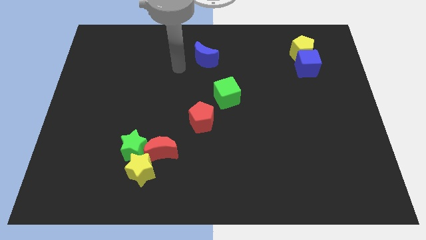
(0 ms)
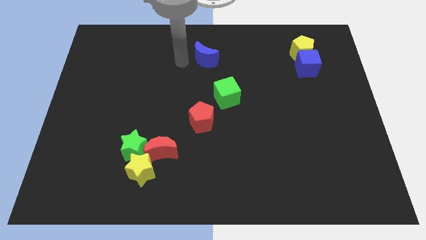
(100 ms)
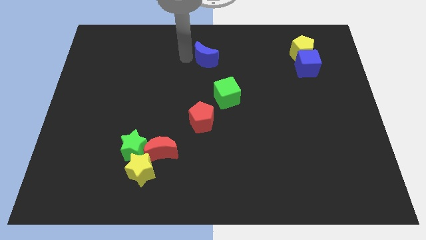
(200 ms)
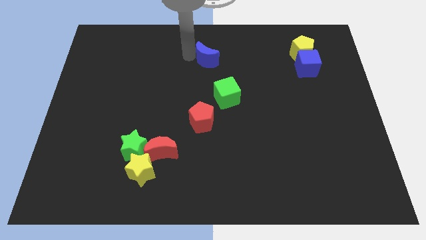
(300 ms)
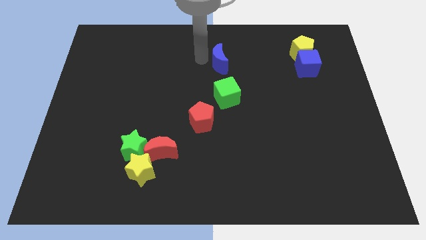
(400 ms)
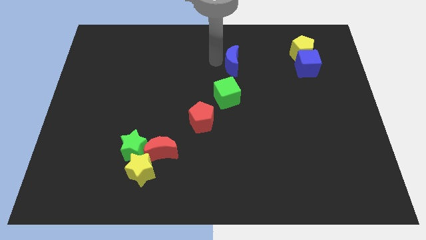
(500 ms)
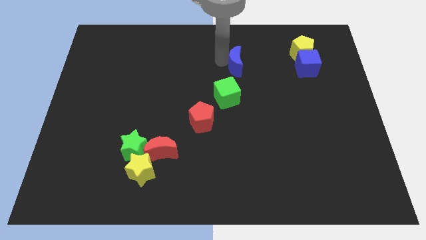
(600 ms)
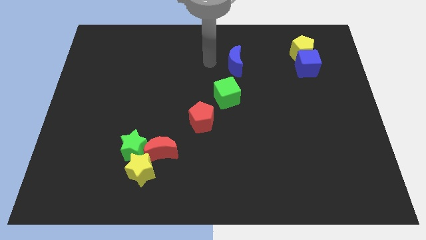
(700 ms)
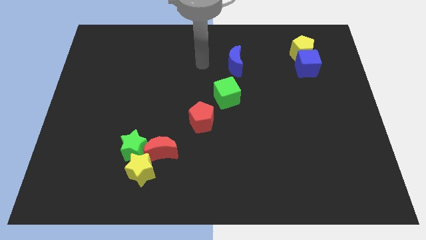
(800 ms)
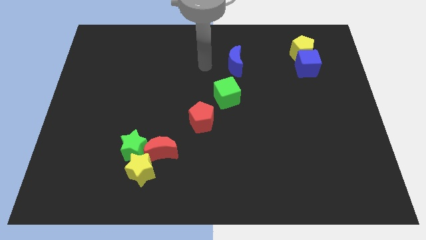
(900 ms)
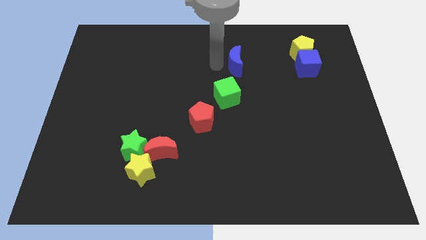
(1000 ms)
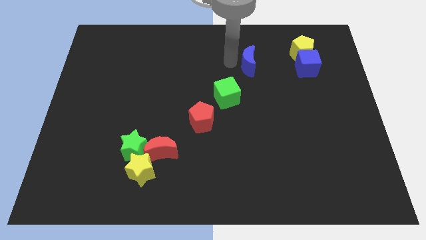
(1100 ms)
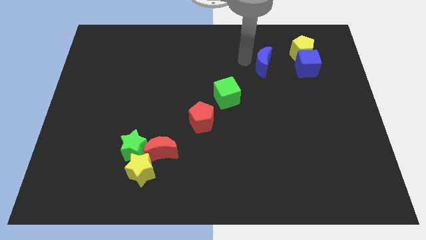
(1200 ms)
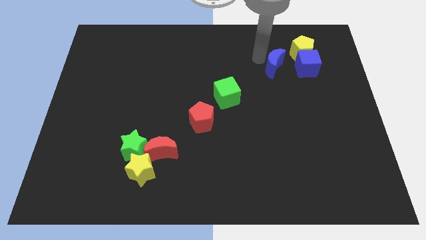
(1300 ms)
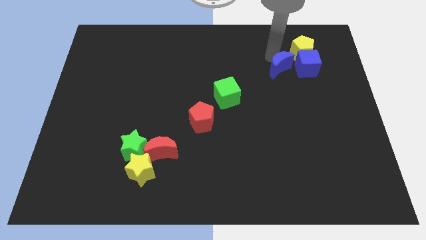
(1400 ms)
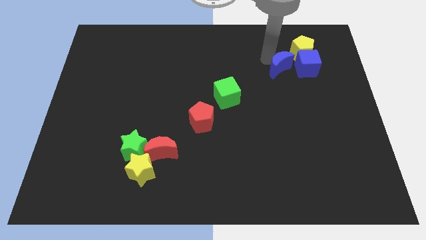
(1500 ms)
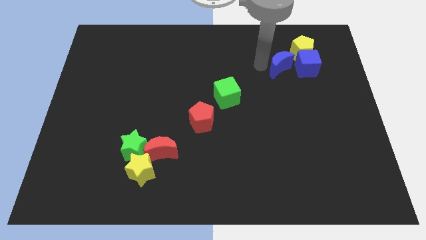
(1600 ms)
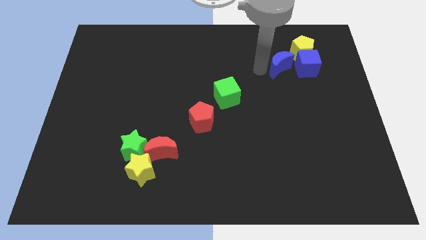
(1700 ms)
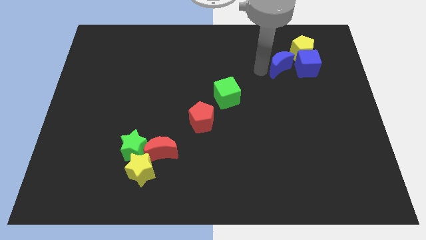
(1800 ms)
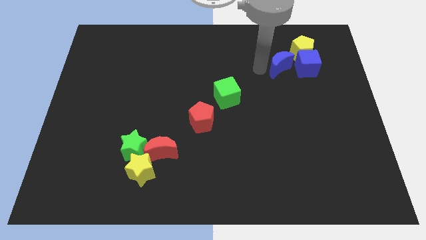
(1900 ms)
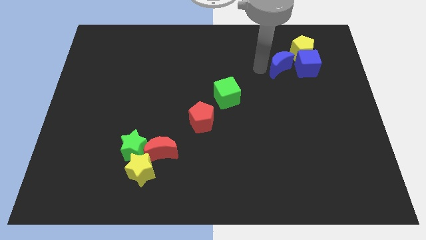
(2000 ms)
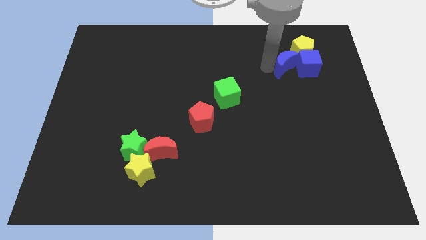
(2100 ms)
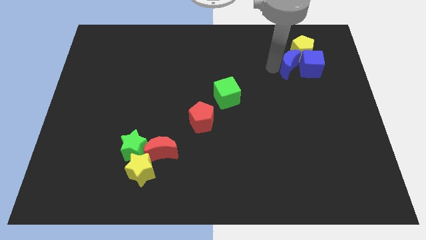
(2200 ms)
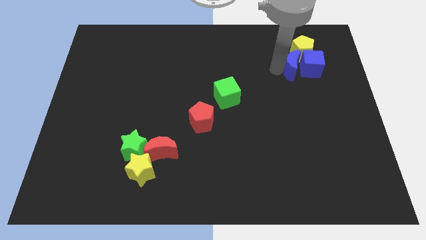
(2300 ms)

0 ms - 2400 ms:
move the blue crescent left to the blue cube

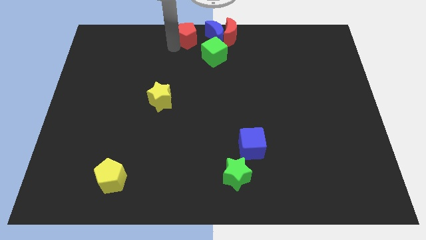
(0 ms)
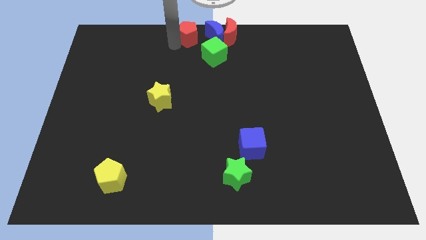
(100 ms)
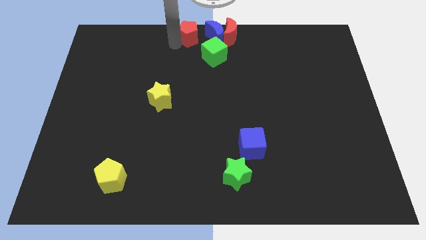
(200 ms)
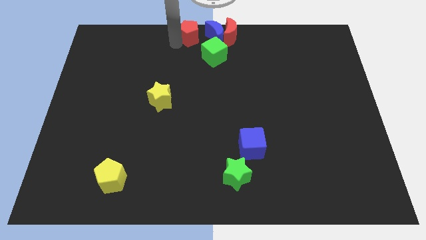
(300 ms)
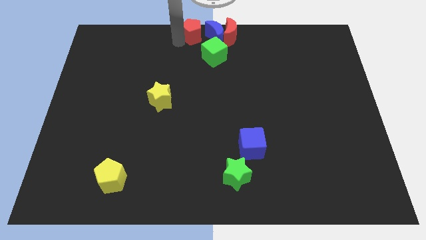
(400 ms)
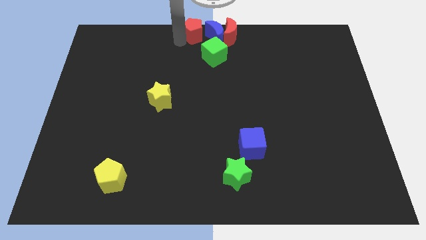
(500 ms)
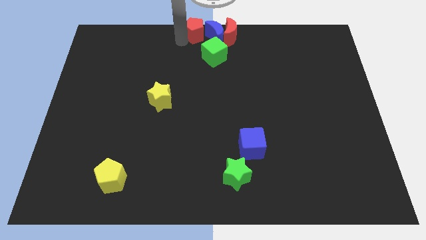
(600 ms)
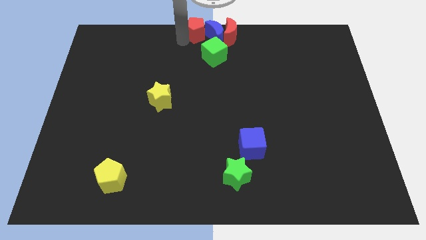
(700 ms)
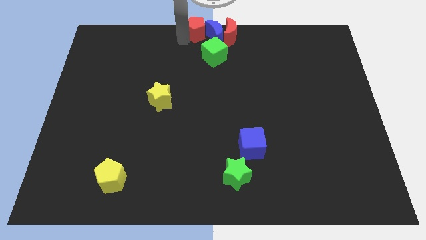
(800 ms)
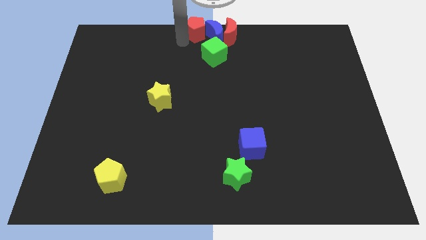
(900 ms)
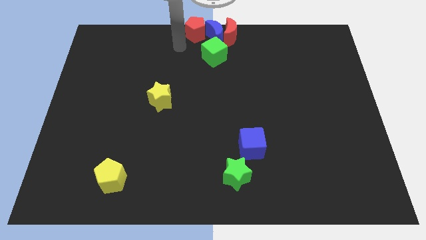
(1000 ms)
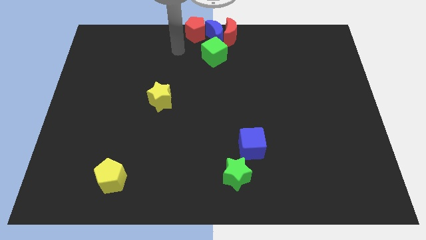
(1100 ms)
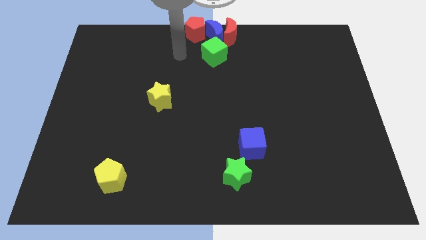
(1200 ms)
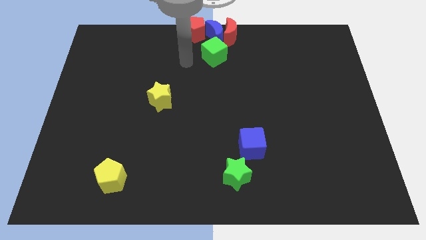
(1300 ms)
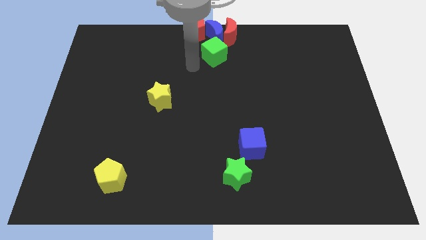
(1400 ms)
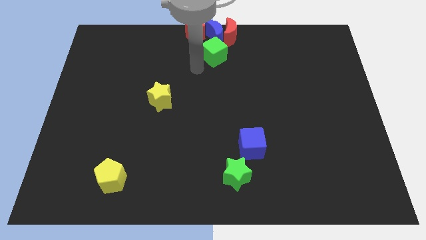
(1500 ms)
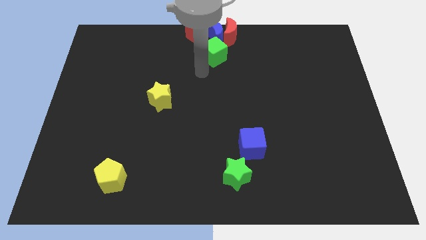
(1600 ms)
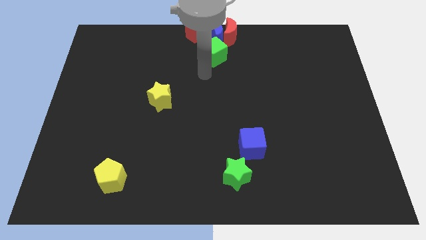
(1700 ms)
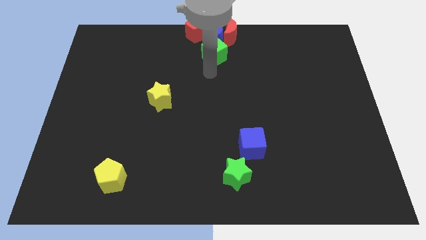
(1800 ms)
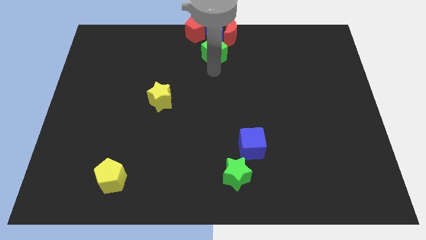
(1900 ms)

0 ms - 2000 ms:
push the red pentagon into the blue crescent

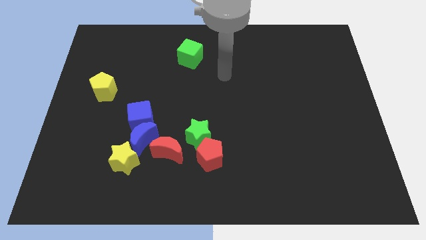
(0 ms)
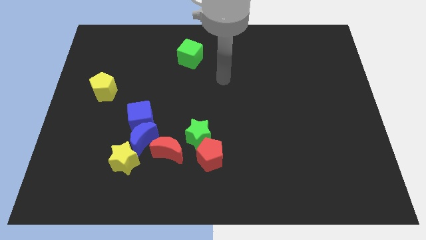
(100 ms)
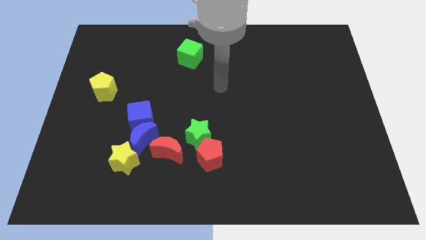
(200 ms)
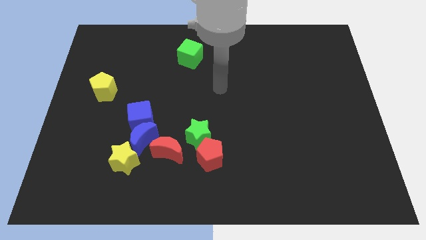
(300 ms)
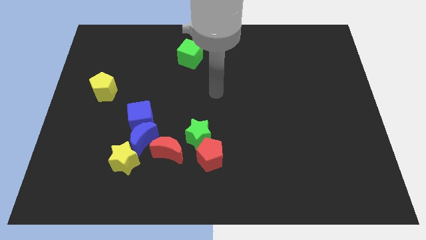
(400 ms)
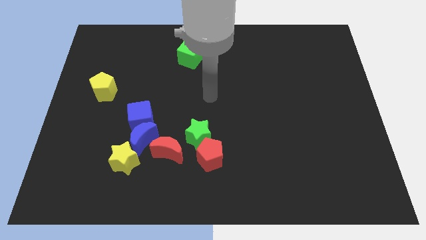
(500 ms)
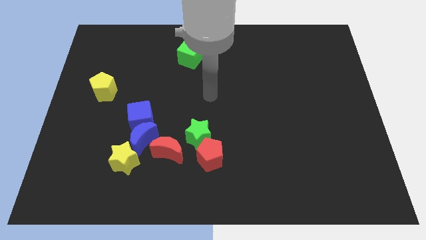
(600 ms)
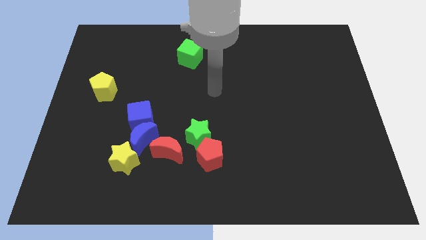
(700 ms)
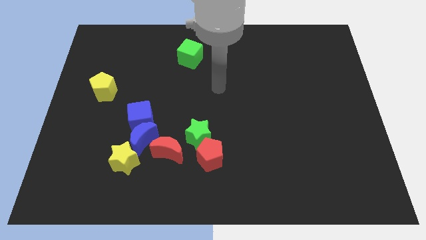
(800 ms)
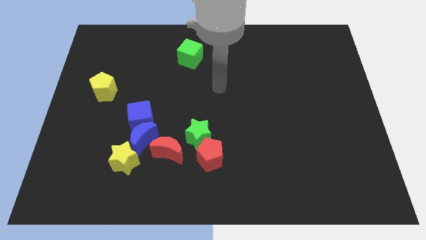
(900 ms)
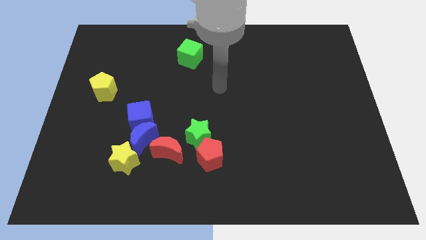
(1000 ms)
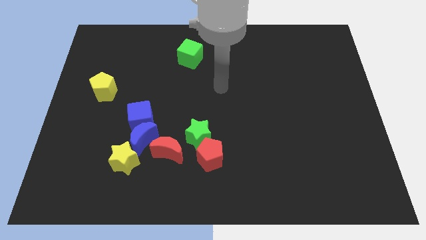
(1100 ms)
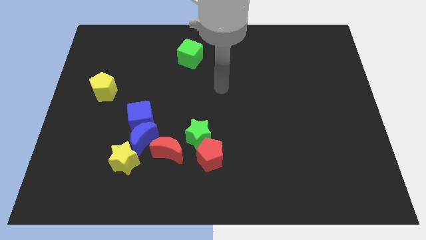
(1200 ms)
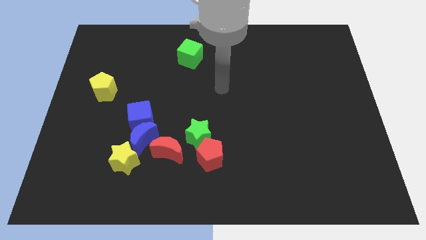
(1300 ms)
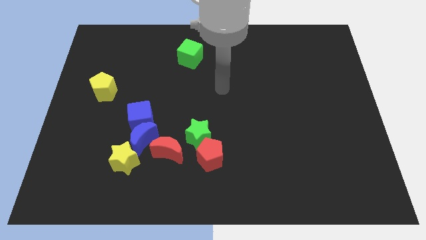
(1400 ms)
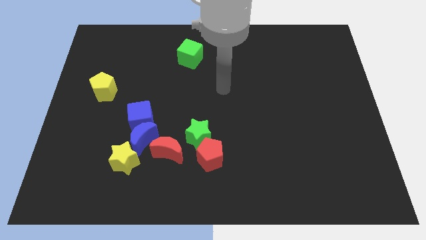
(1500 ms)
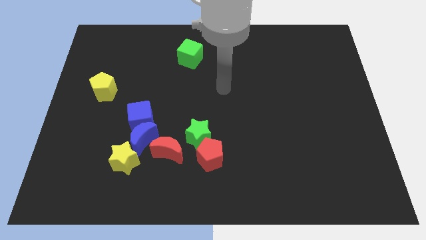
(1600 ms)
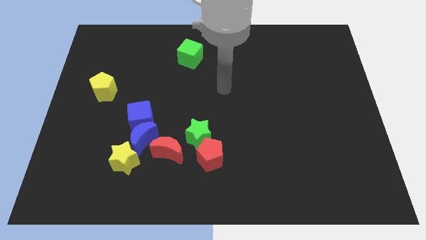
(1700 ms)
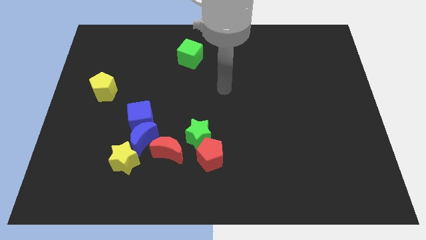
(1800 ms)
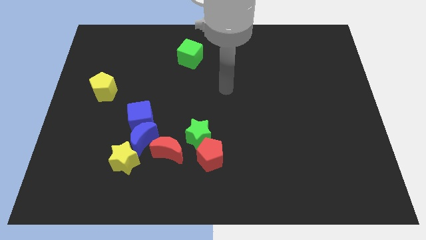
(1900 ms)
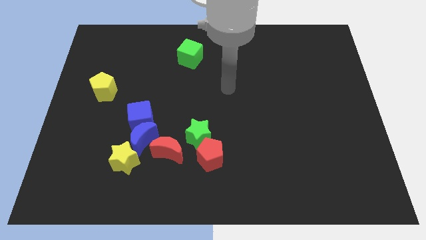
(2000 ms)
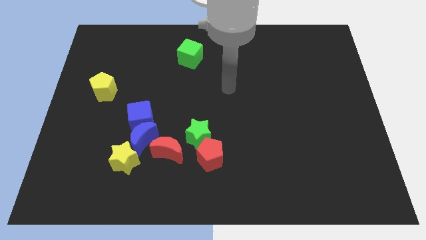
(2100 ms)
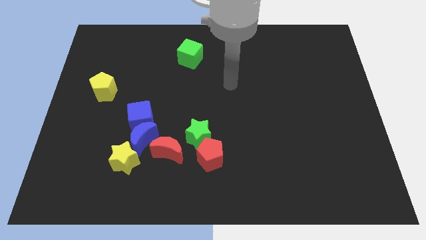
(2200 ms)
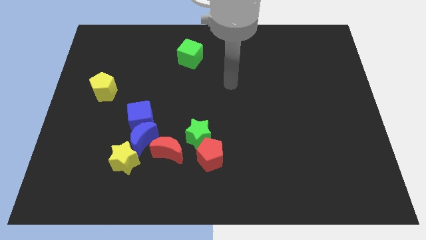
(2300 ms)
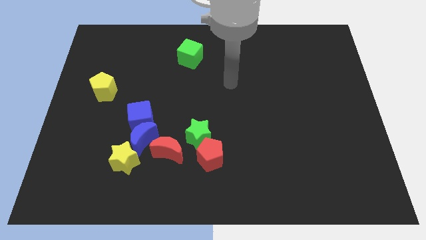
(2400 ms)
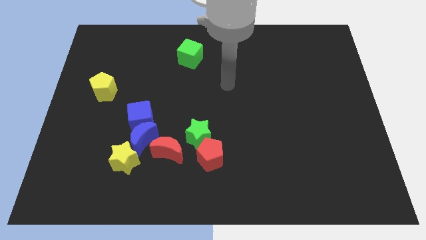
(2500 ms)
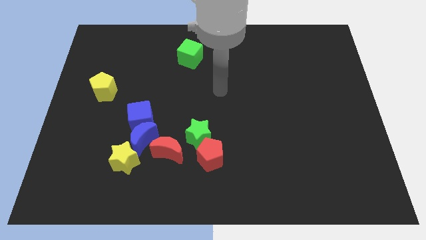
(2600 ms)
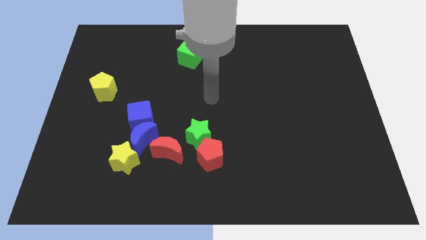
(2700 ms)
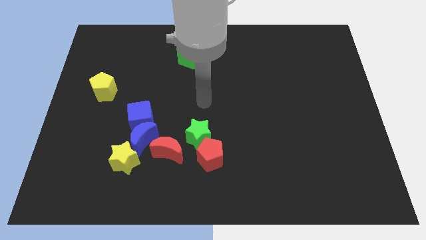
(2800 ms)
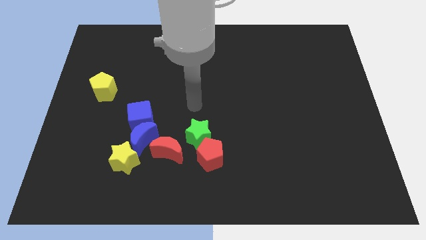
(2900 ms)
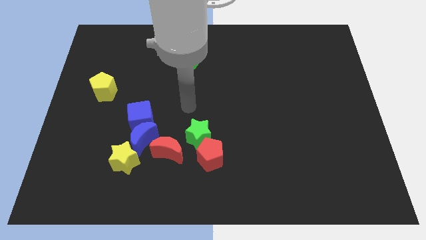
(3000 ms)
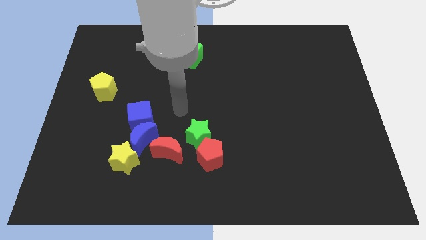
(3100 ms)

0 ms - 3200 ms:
move your arm to the right side of the blue cube

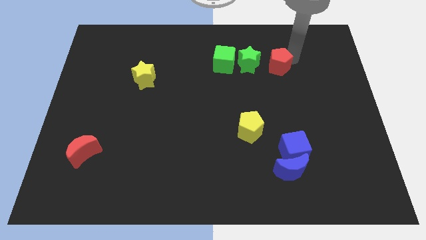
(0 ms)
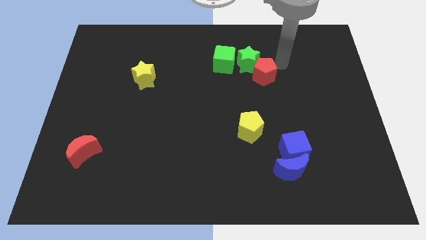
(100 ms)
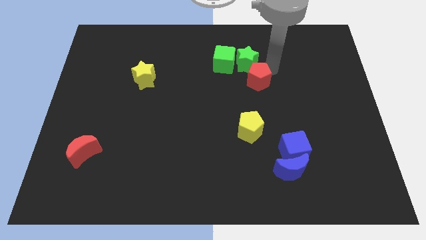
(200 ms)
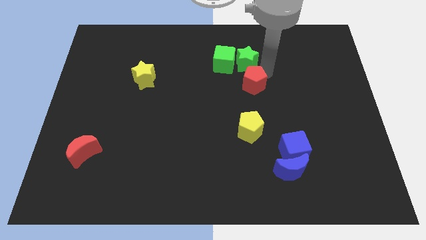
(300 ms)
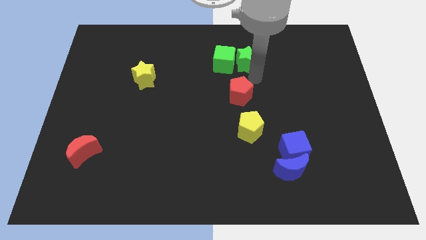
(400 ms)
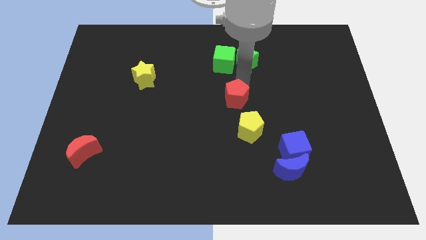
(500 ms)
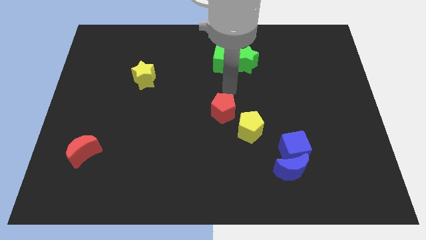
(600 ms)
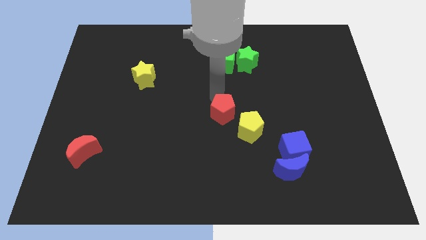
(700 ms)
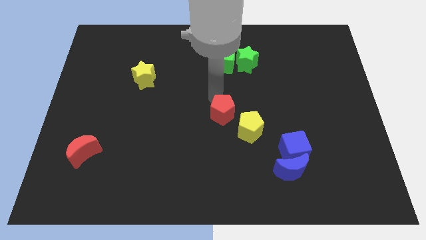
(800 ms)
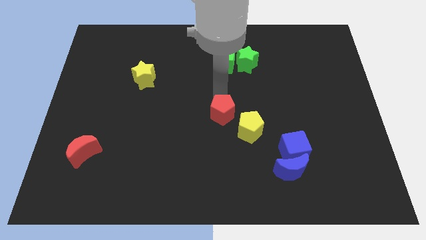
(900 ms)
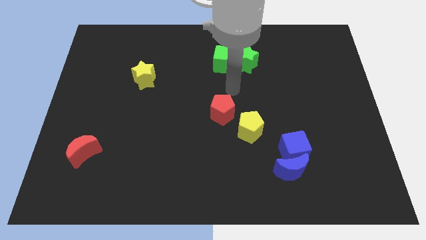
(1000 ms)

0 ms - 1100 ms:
push the red pentagon towards the bottom side of the board

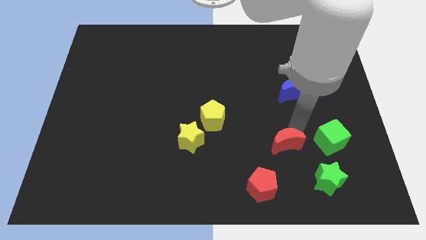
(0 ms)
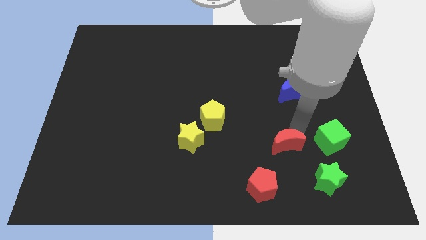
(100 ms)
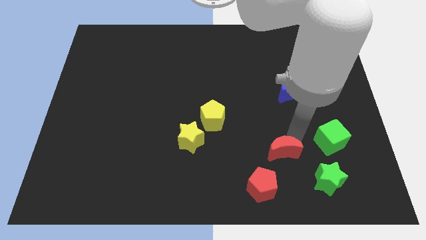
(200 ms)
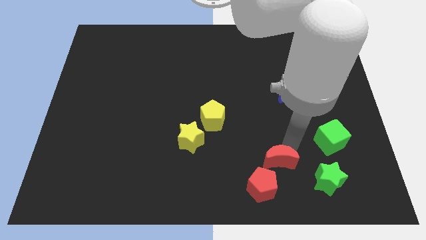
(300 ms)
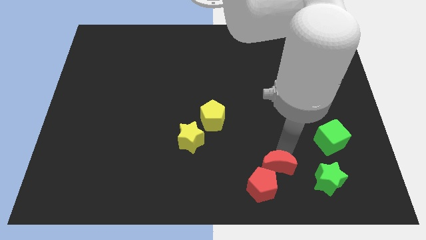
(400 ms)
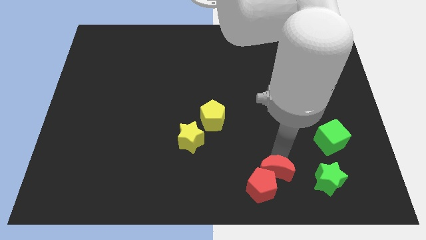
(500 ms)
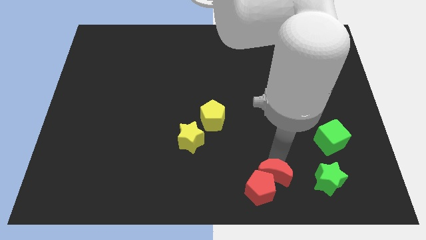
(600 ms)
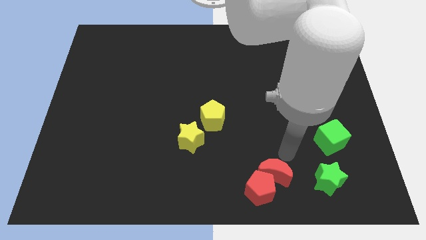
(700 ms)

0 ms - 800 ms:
push the red crescent above the red pentagon
